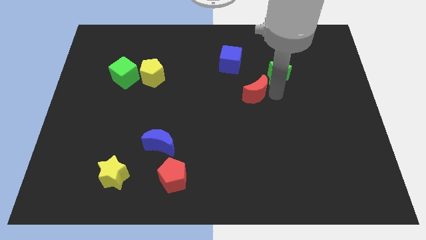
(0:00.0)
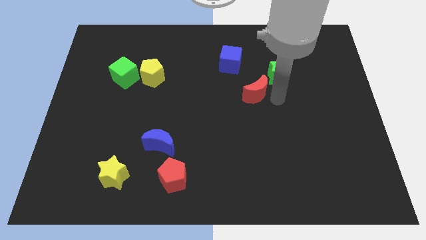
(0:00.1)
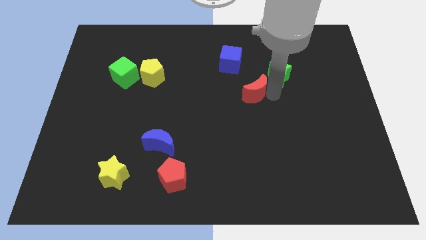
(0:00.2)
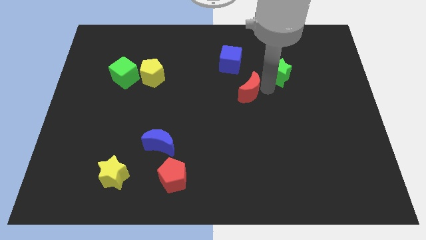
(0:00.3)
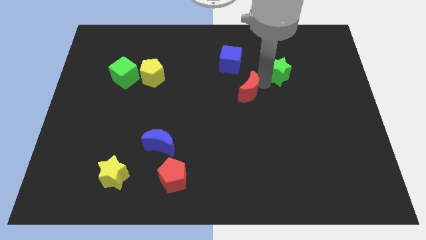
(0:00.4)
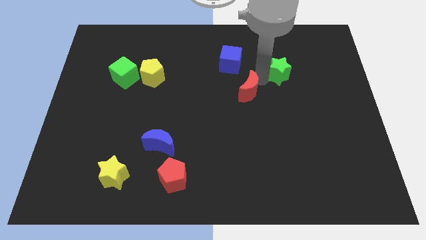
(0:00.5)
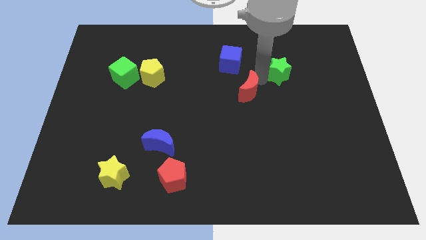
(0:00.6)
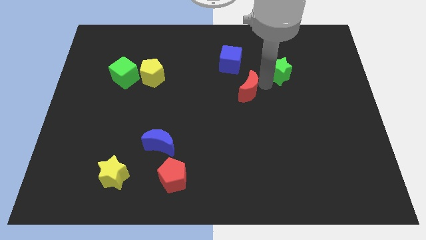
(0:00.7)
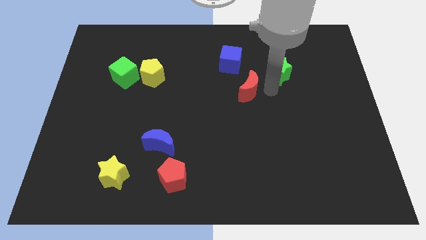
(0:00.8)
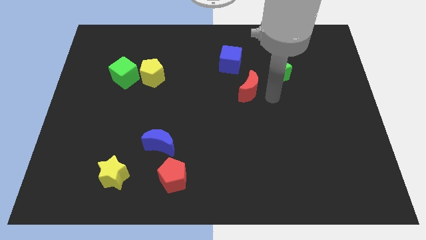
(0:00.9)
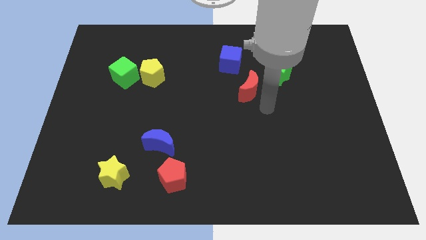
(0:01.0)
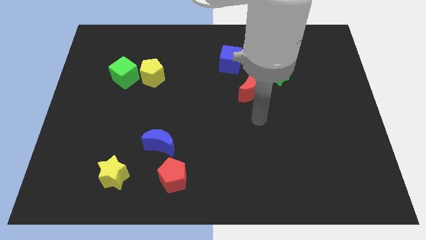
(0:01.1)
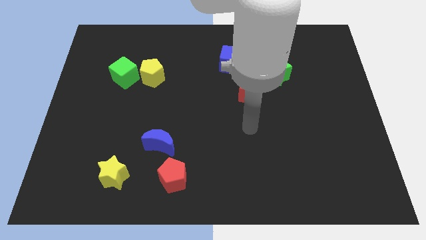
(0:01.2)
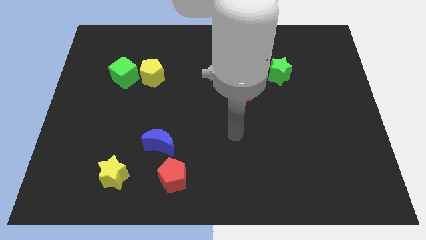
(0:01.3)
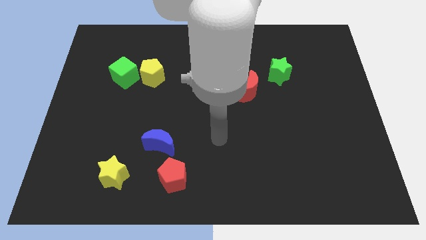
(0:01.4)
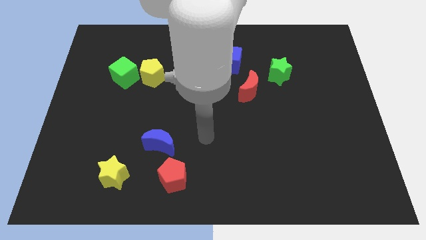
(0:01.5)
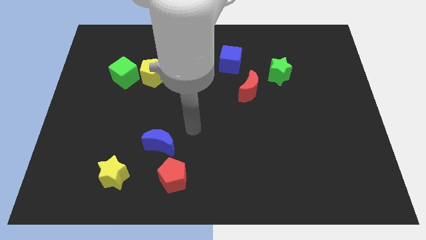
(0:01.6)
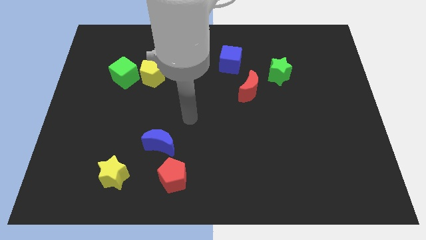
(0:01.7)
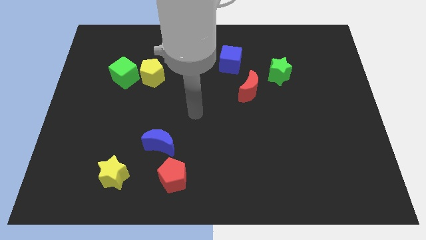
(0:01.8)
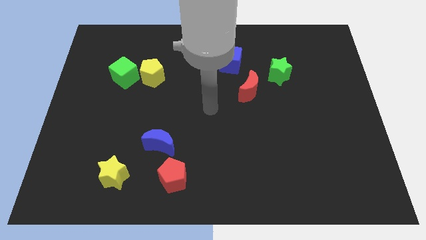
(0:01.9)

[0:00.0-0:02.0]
place your arm to the center of the board

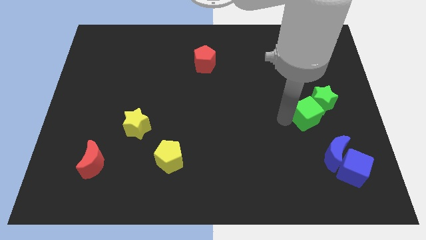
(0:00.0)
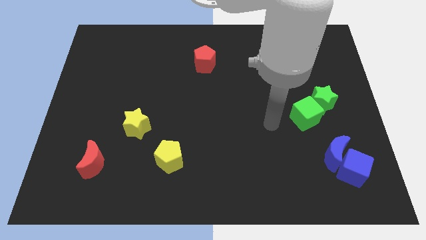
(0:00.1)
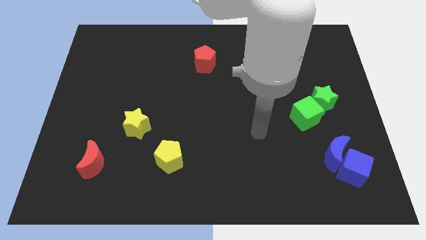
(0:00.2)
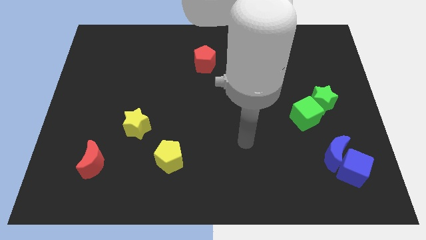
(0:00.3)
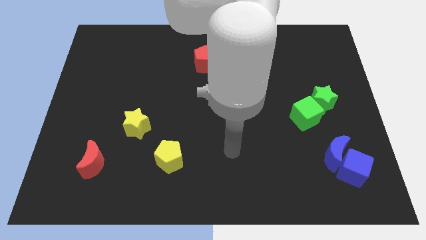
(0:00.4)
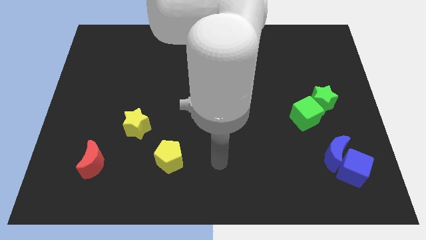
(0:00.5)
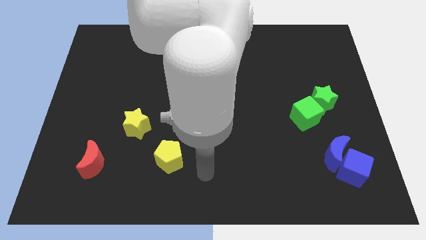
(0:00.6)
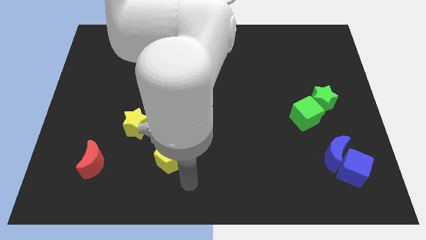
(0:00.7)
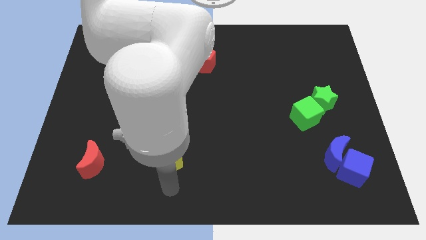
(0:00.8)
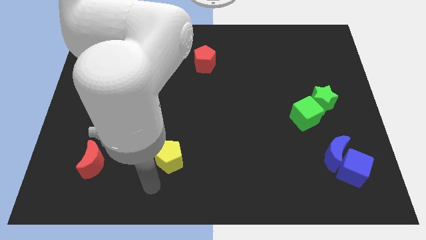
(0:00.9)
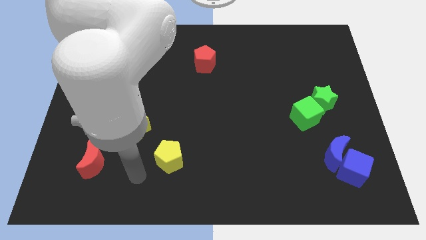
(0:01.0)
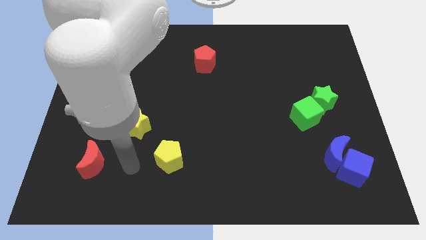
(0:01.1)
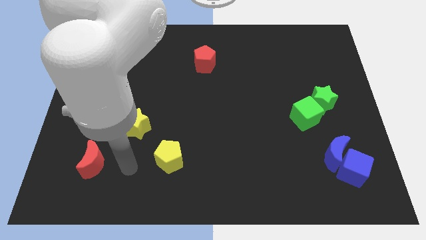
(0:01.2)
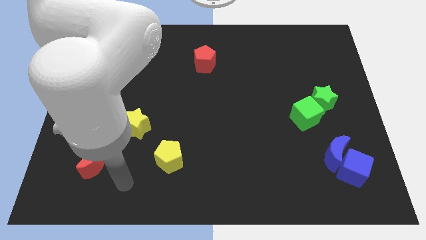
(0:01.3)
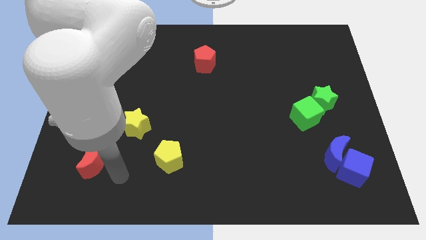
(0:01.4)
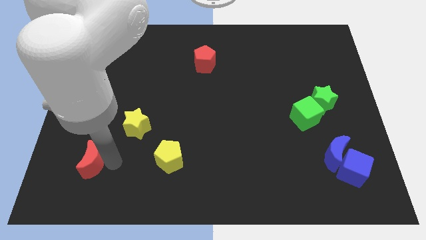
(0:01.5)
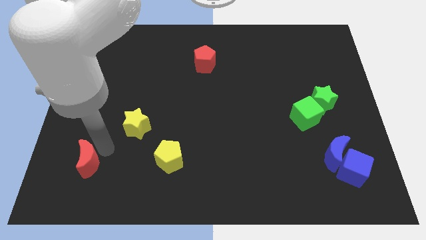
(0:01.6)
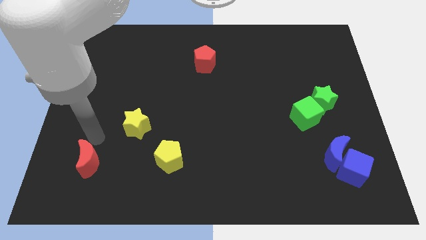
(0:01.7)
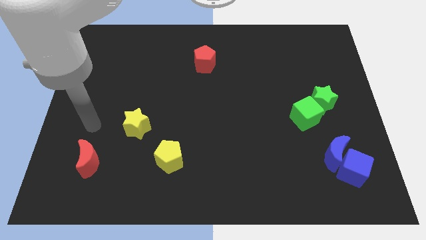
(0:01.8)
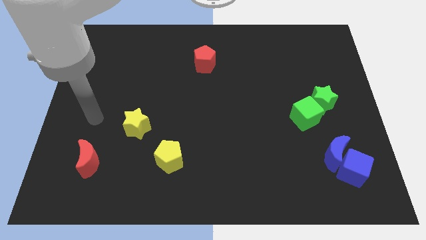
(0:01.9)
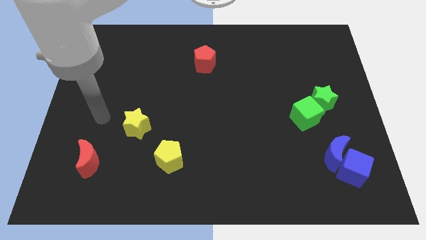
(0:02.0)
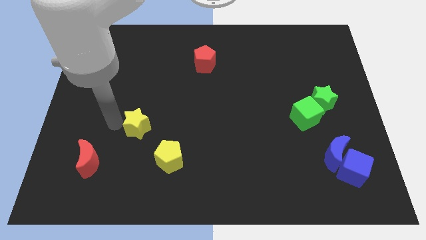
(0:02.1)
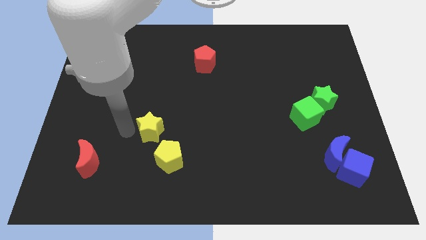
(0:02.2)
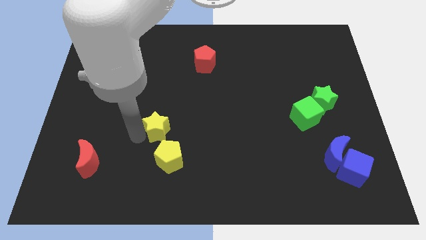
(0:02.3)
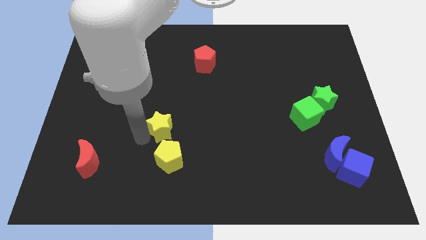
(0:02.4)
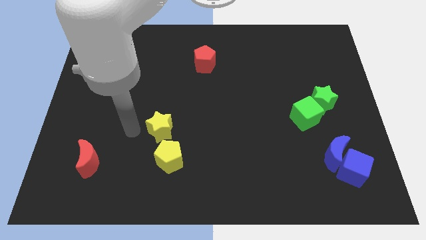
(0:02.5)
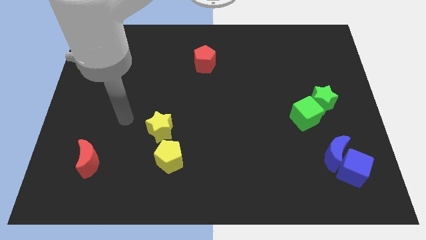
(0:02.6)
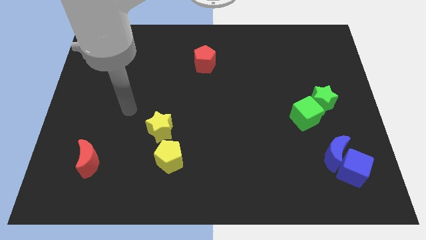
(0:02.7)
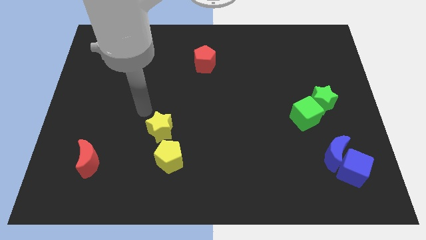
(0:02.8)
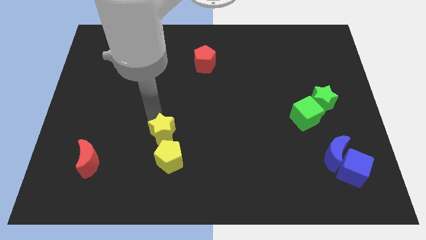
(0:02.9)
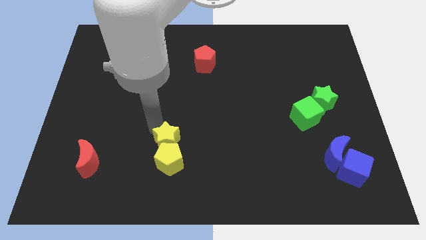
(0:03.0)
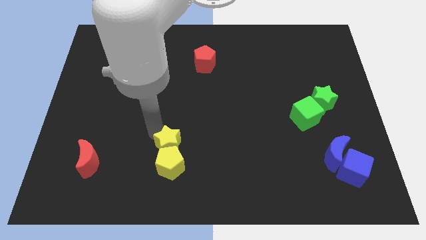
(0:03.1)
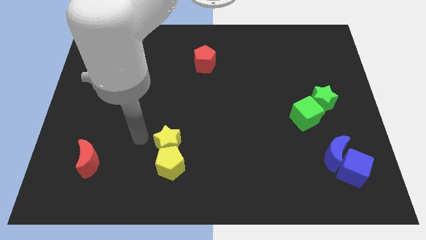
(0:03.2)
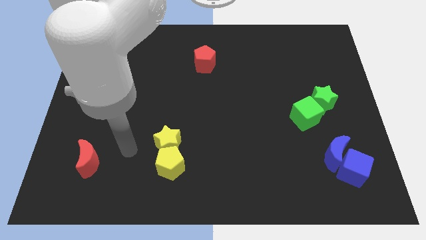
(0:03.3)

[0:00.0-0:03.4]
place the yellow star above the yellow pentagon

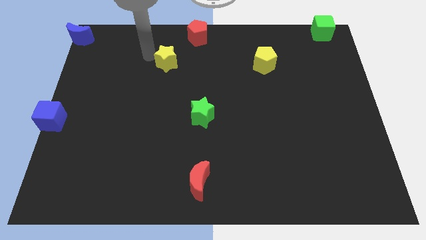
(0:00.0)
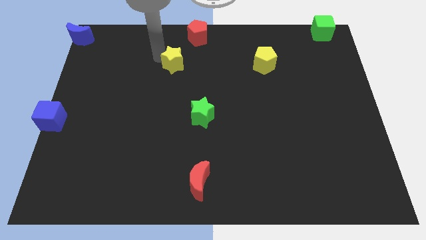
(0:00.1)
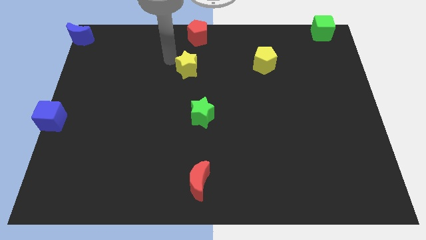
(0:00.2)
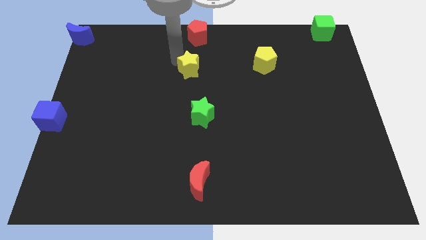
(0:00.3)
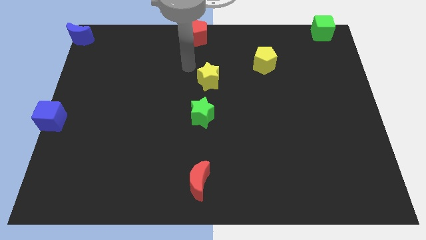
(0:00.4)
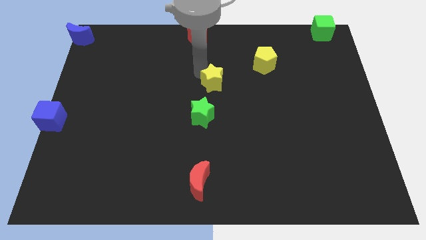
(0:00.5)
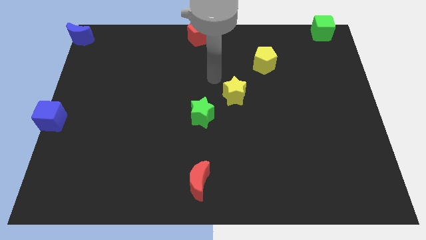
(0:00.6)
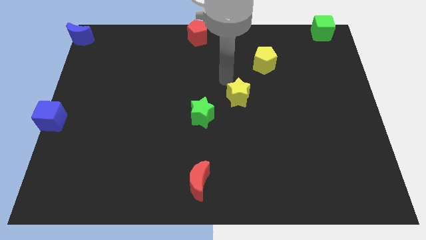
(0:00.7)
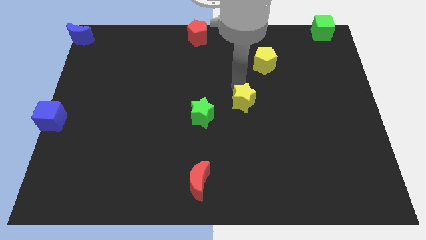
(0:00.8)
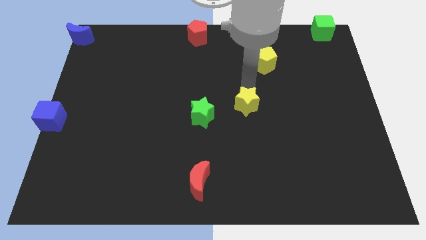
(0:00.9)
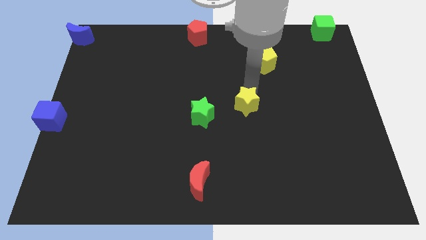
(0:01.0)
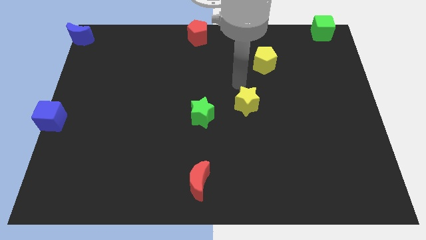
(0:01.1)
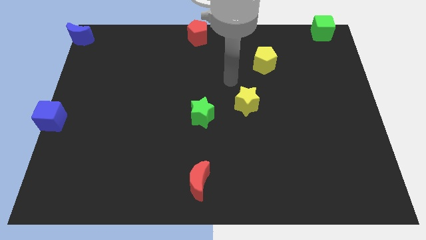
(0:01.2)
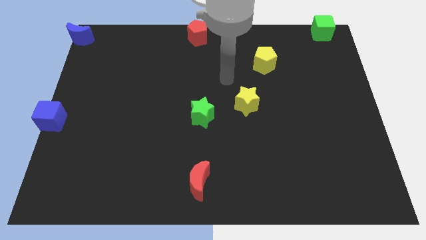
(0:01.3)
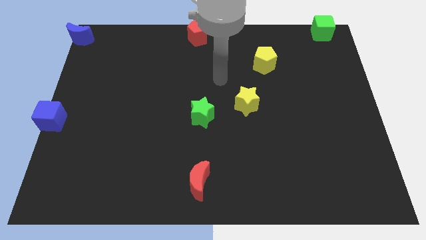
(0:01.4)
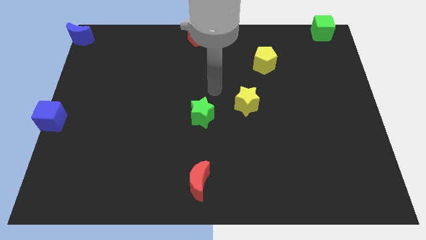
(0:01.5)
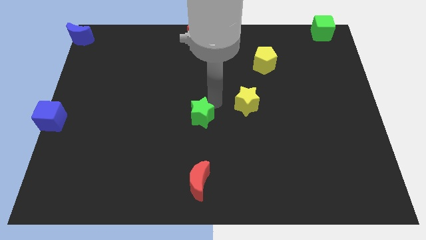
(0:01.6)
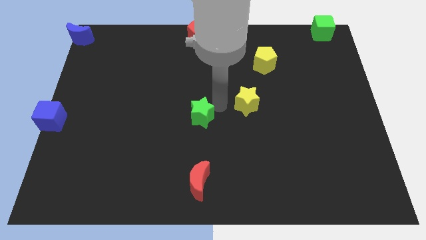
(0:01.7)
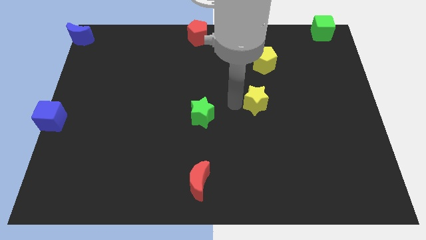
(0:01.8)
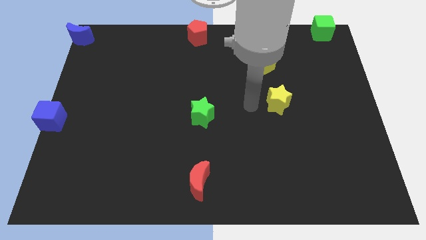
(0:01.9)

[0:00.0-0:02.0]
move yellow star towards bottom of yellow pentagon

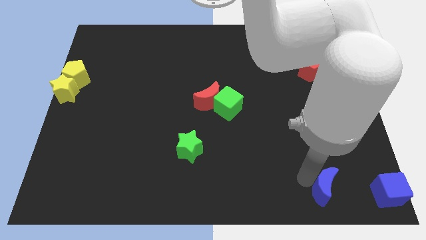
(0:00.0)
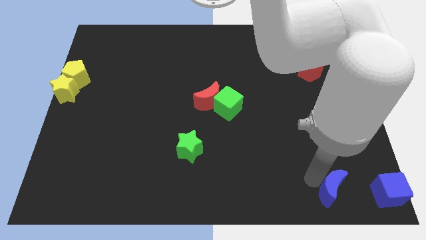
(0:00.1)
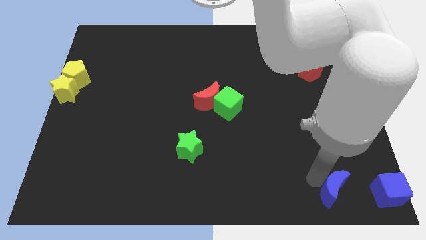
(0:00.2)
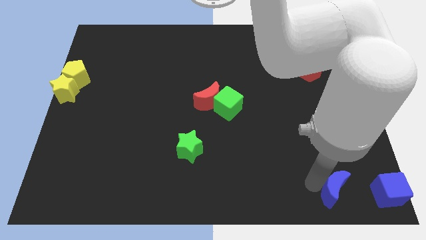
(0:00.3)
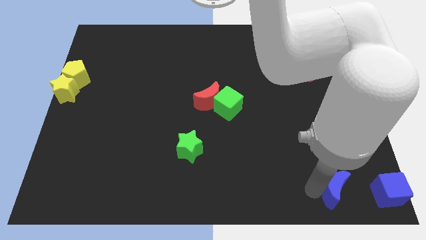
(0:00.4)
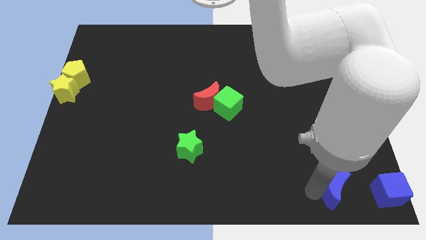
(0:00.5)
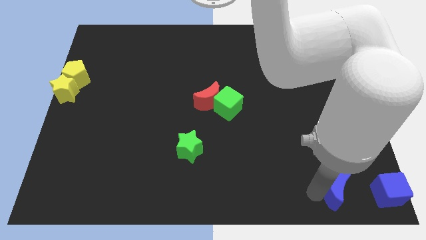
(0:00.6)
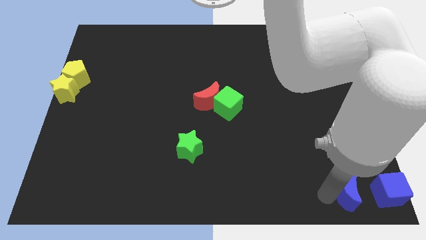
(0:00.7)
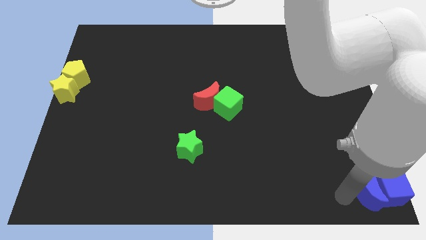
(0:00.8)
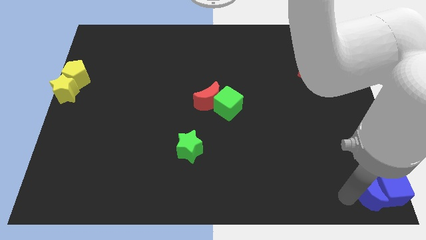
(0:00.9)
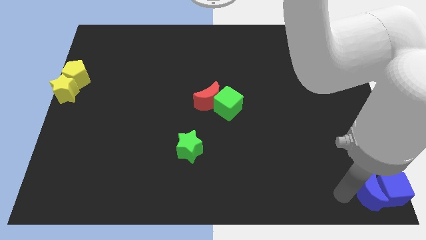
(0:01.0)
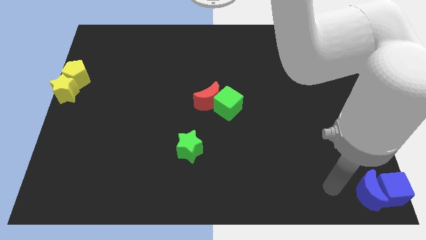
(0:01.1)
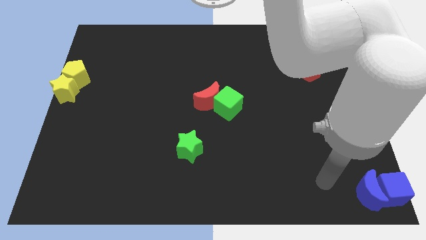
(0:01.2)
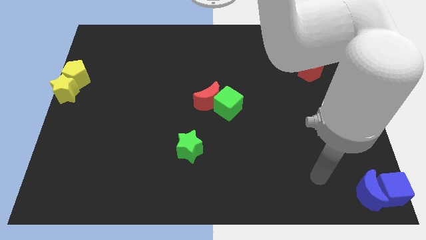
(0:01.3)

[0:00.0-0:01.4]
push the blue moon into the blue cube

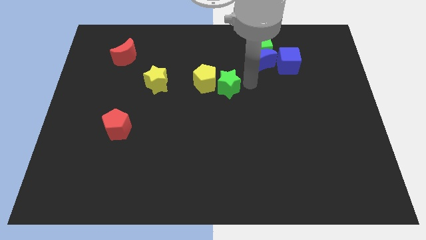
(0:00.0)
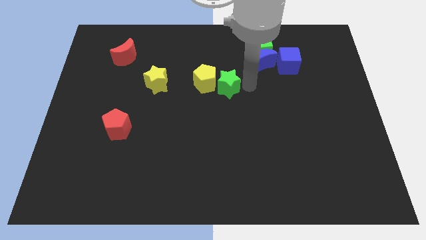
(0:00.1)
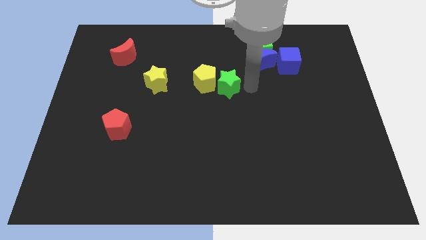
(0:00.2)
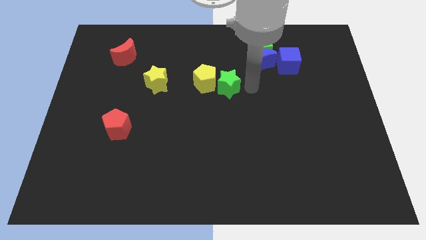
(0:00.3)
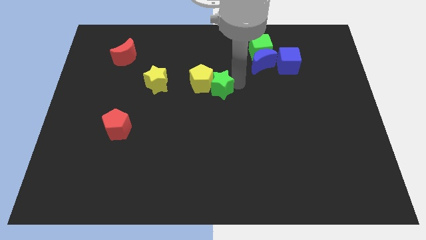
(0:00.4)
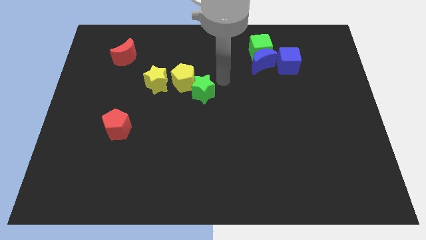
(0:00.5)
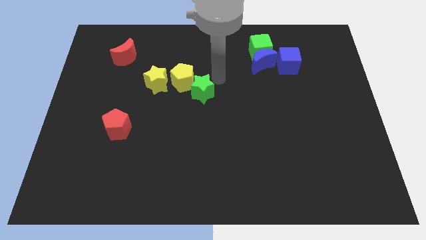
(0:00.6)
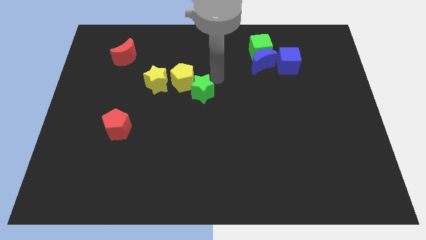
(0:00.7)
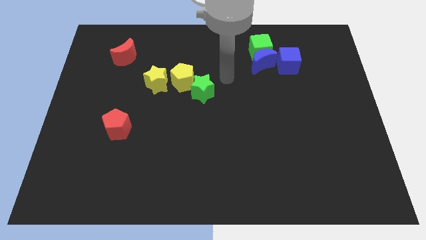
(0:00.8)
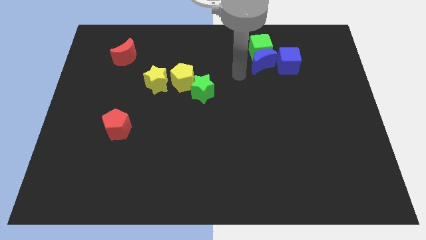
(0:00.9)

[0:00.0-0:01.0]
move the green star to the right of the yellow pentagon
